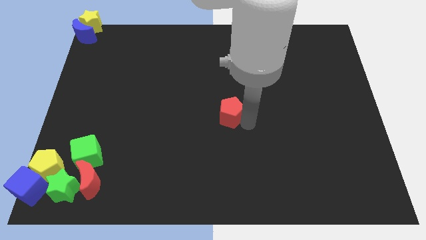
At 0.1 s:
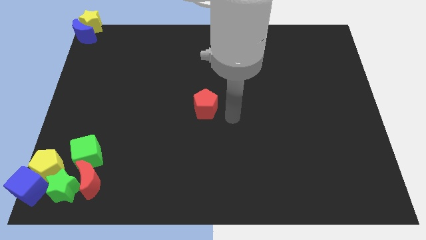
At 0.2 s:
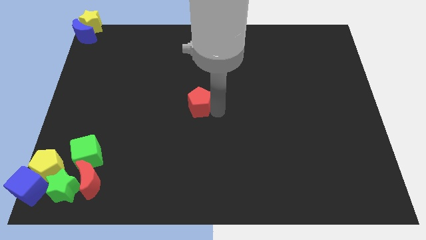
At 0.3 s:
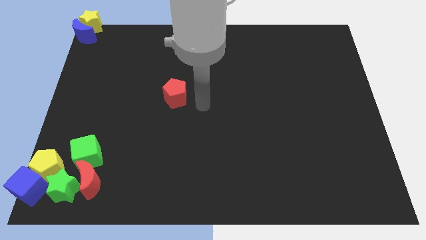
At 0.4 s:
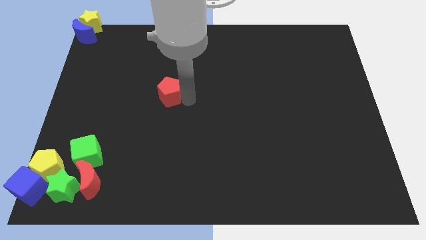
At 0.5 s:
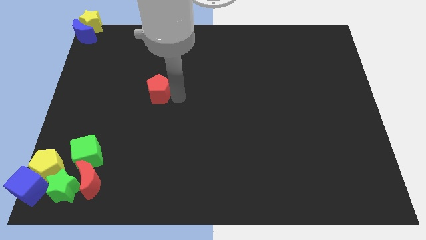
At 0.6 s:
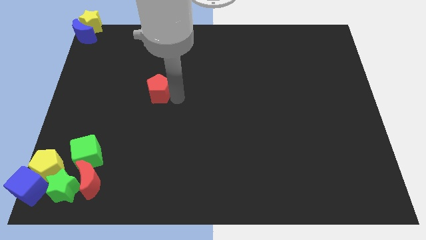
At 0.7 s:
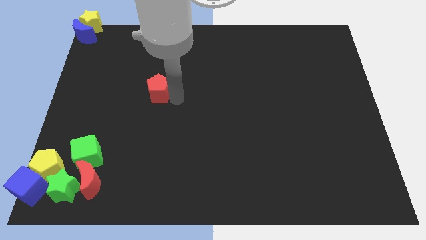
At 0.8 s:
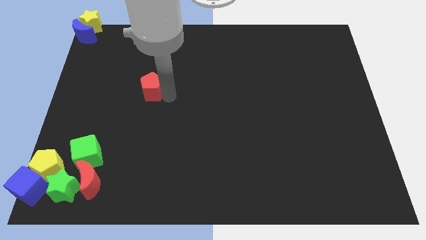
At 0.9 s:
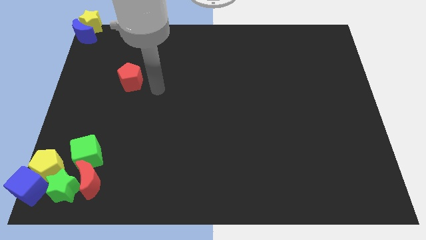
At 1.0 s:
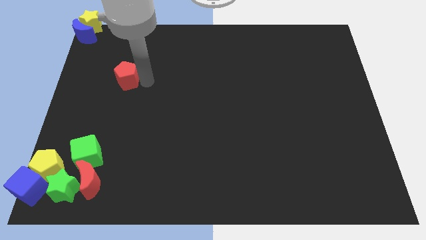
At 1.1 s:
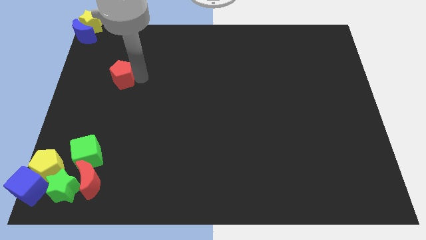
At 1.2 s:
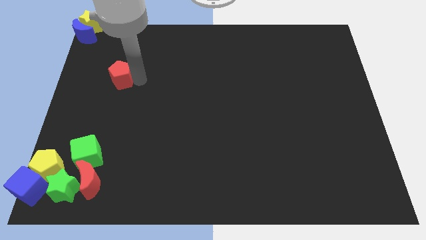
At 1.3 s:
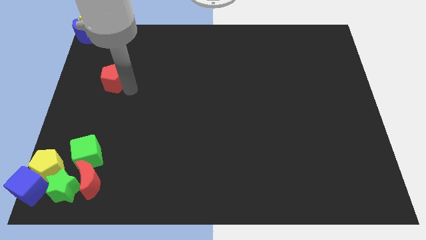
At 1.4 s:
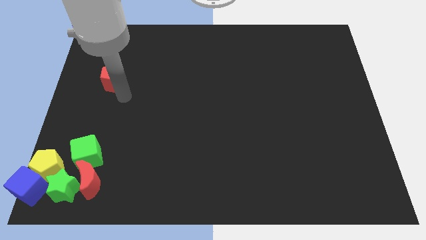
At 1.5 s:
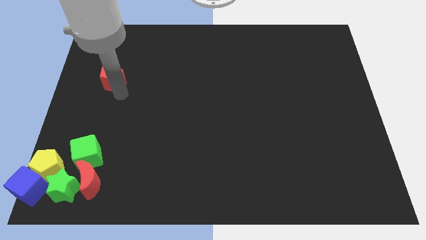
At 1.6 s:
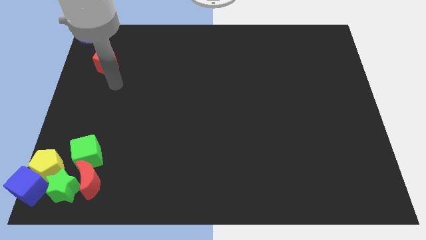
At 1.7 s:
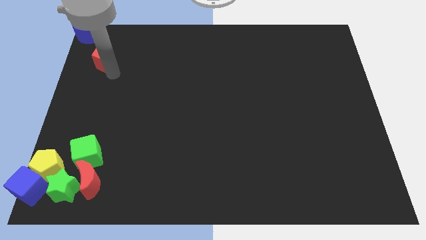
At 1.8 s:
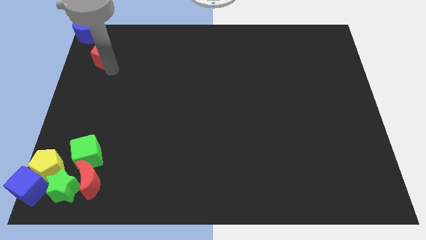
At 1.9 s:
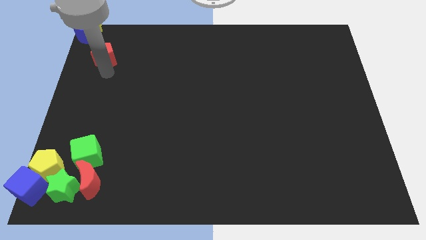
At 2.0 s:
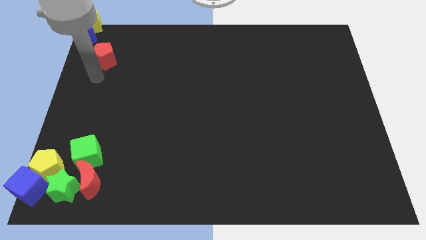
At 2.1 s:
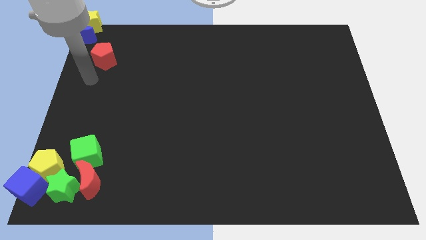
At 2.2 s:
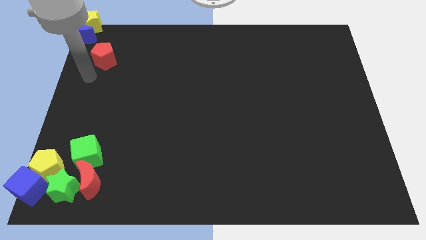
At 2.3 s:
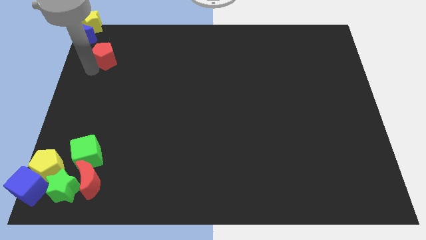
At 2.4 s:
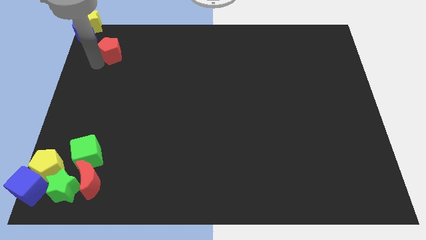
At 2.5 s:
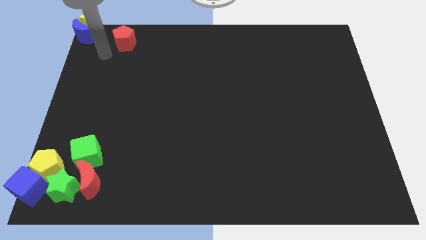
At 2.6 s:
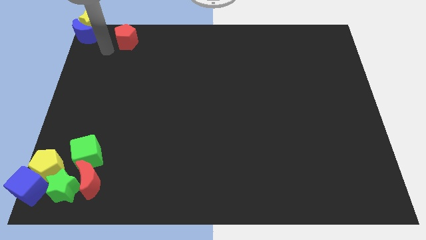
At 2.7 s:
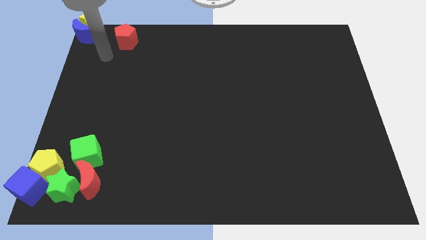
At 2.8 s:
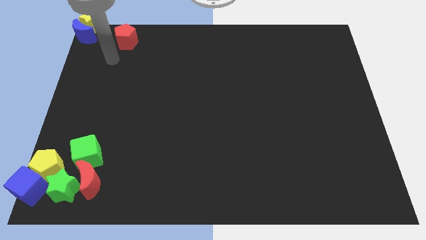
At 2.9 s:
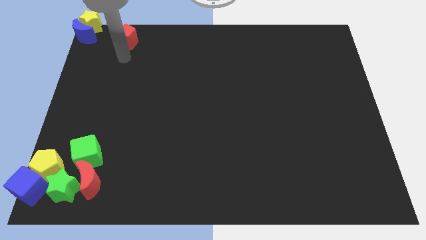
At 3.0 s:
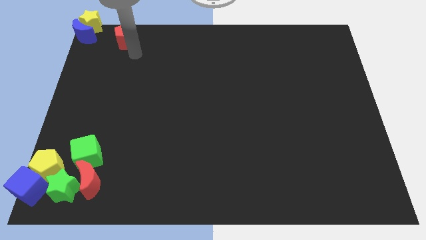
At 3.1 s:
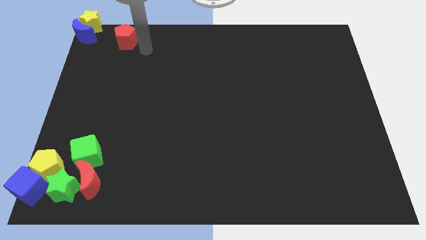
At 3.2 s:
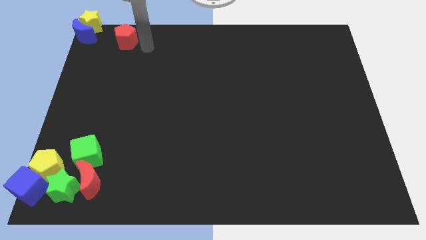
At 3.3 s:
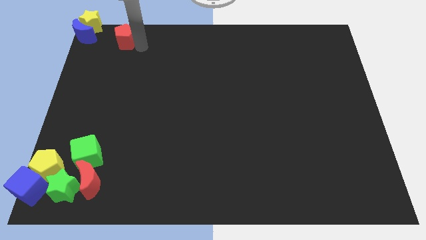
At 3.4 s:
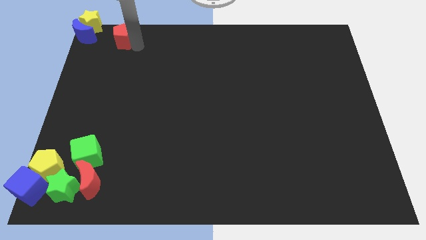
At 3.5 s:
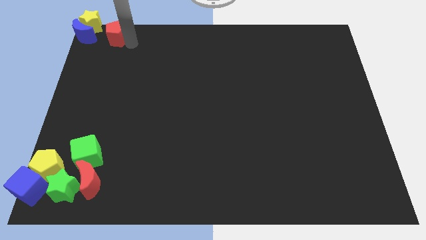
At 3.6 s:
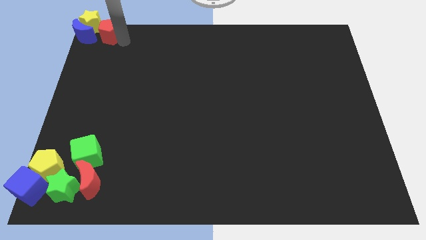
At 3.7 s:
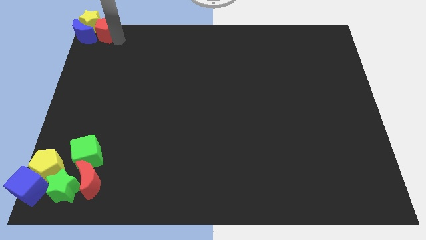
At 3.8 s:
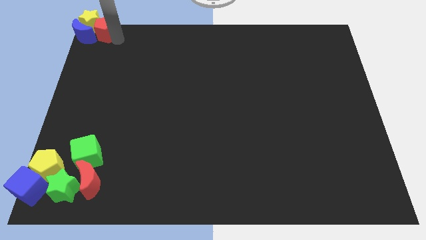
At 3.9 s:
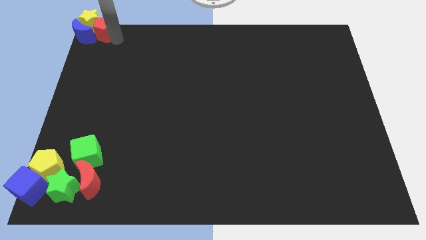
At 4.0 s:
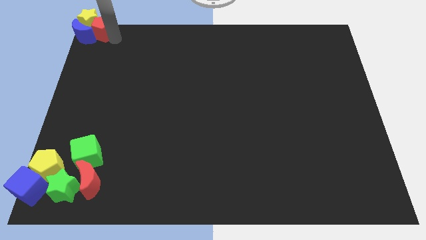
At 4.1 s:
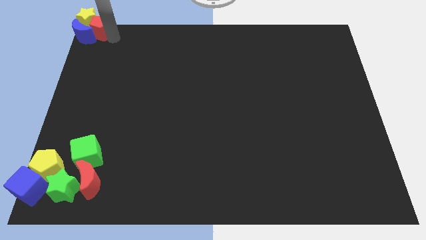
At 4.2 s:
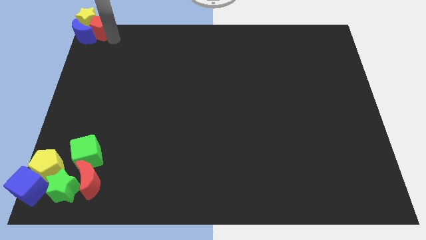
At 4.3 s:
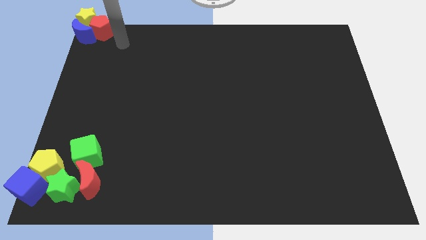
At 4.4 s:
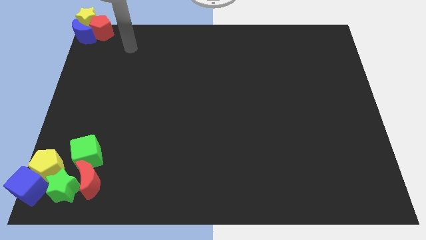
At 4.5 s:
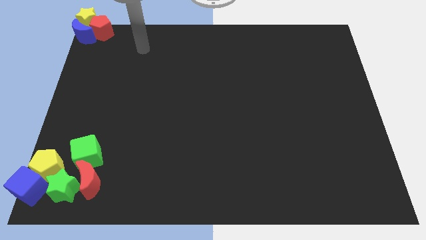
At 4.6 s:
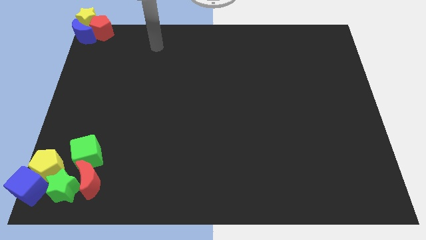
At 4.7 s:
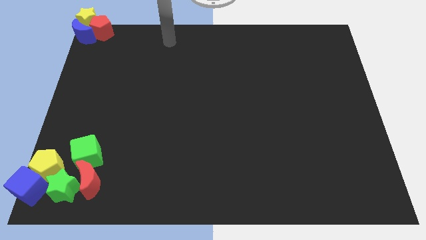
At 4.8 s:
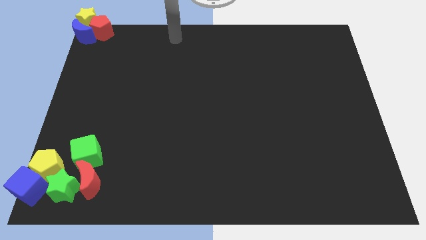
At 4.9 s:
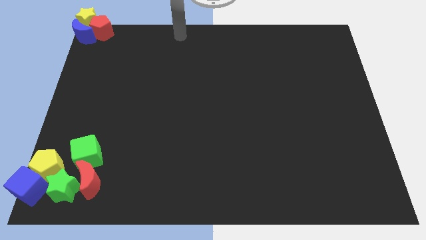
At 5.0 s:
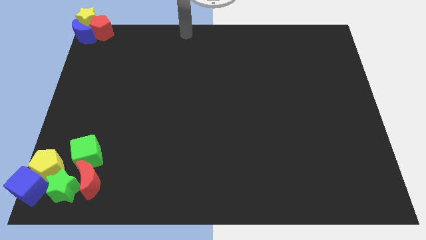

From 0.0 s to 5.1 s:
push the red pentagon towards the yellow star and blue moon

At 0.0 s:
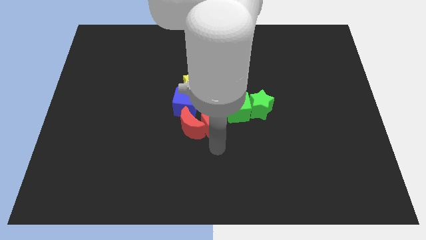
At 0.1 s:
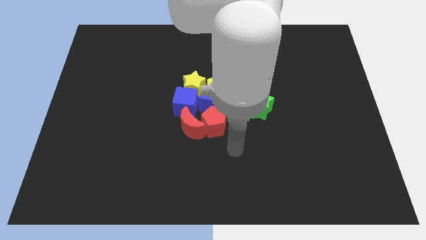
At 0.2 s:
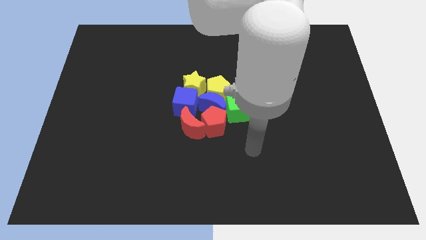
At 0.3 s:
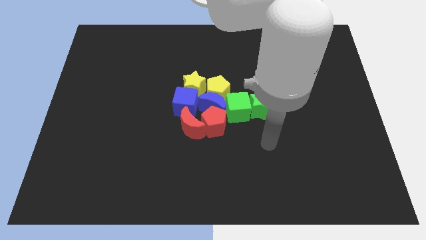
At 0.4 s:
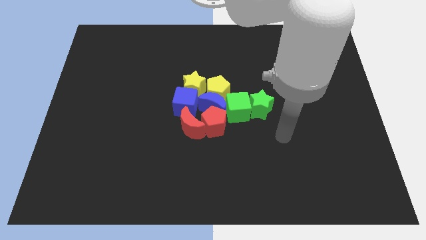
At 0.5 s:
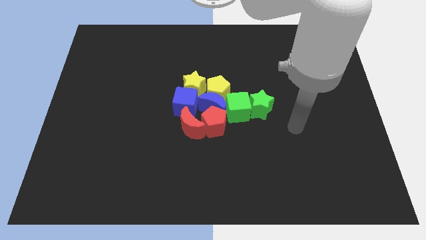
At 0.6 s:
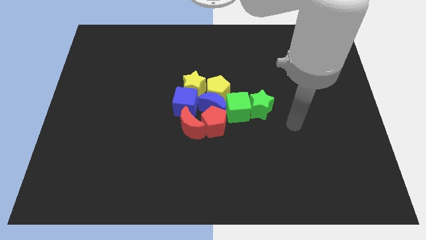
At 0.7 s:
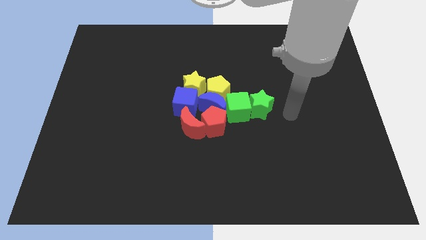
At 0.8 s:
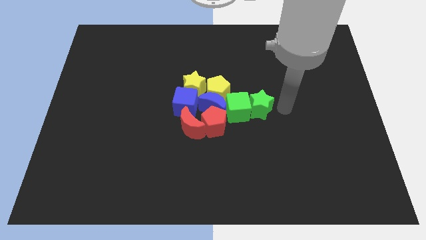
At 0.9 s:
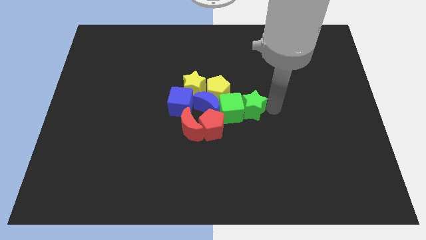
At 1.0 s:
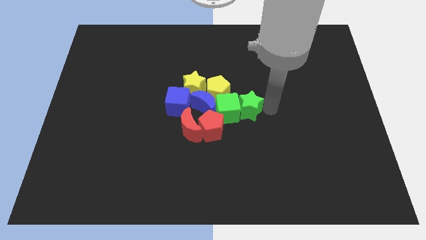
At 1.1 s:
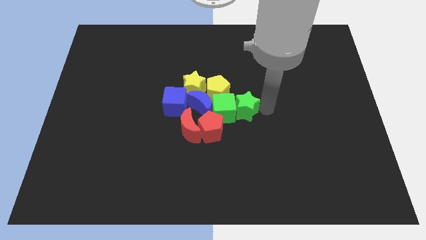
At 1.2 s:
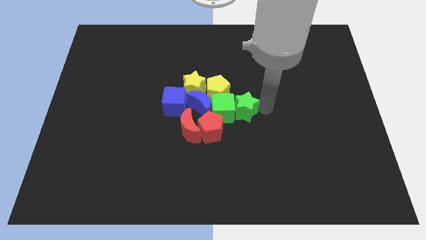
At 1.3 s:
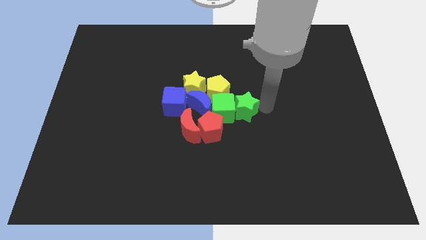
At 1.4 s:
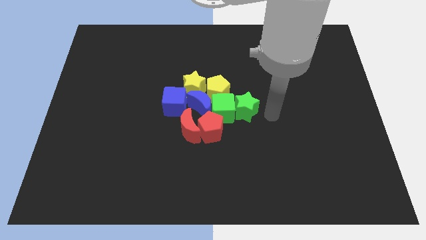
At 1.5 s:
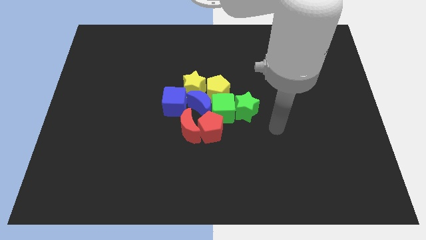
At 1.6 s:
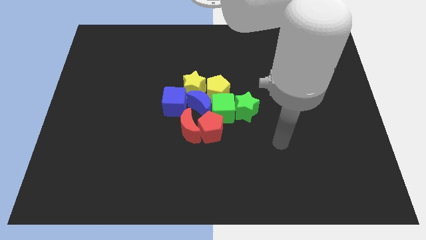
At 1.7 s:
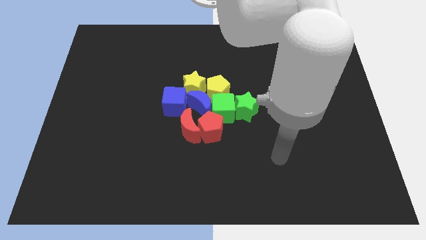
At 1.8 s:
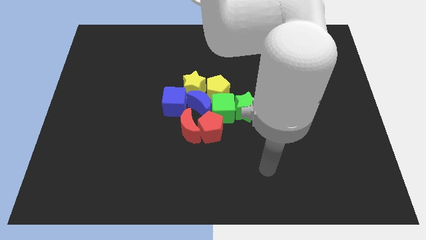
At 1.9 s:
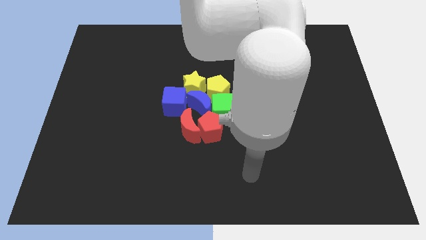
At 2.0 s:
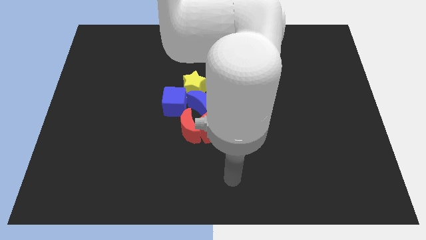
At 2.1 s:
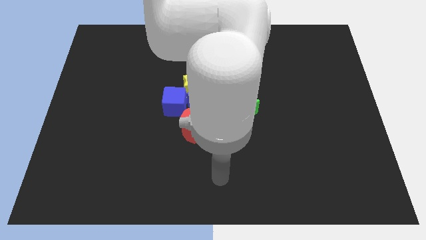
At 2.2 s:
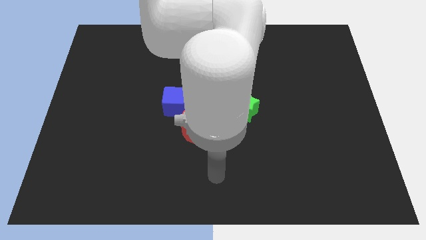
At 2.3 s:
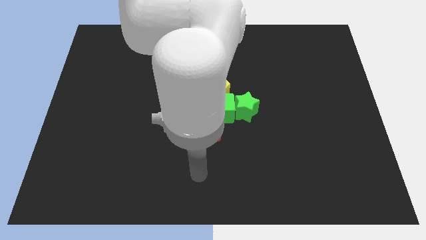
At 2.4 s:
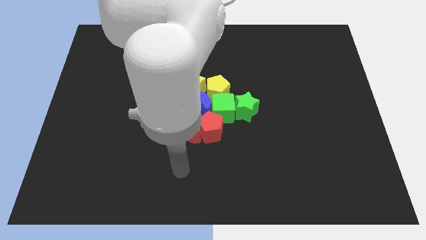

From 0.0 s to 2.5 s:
push the green star to the center of the board

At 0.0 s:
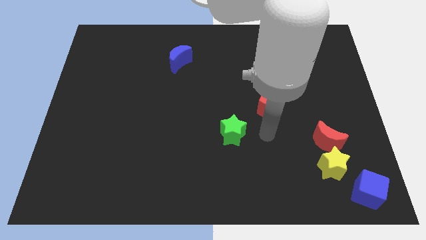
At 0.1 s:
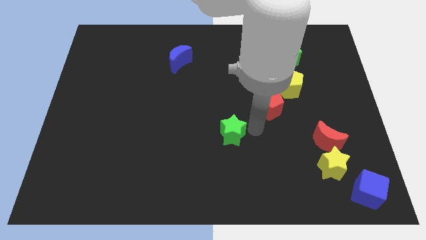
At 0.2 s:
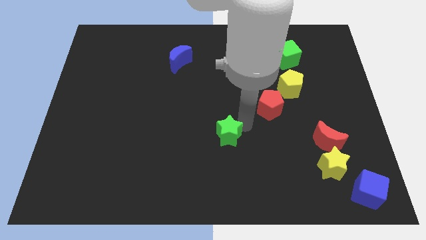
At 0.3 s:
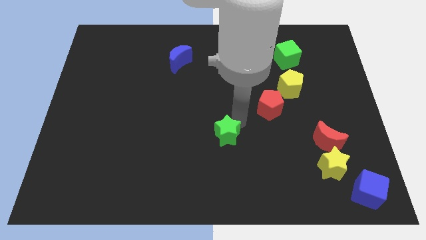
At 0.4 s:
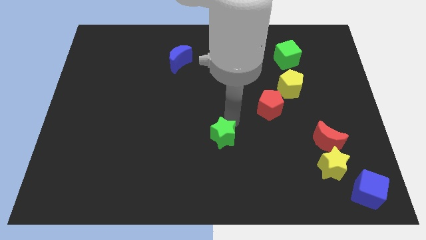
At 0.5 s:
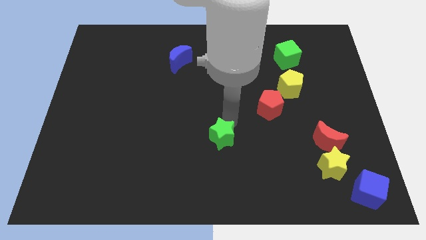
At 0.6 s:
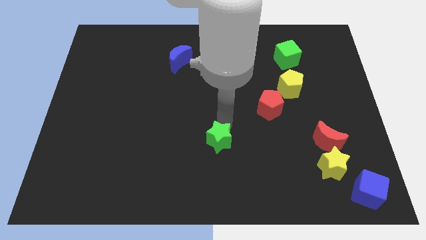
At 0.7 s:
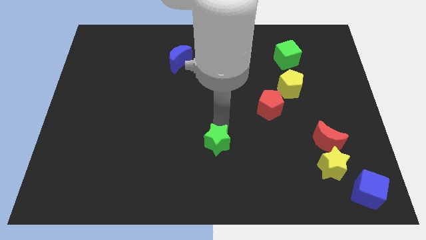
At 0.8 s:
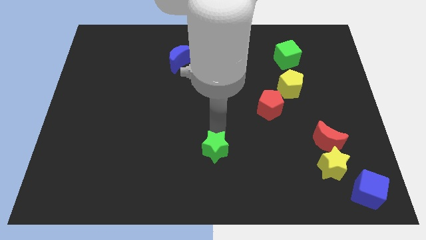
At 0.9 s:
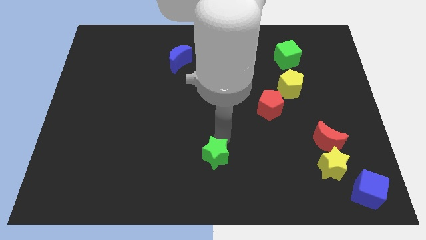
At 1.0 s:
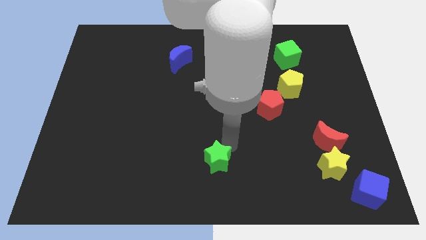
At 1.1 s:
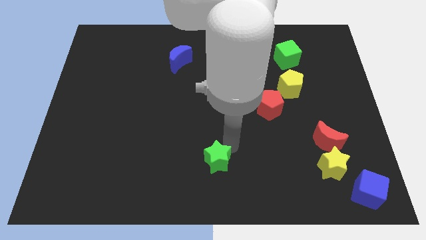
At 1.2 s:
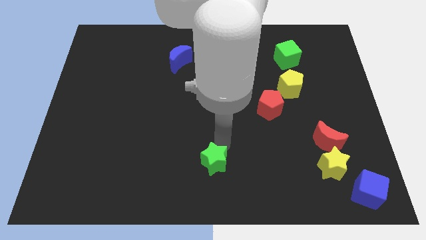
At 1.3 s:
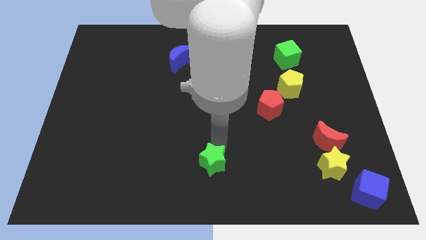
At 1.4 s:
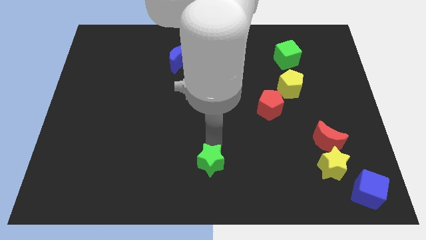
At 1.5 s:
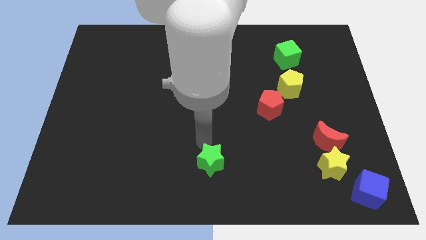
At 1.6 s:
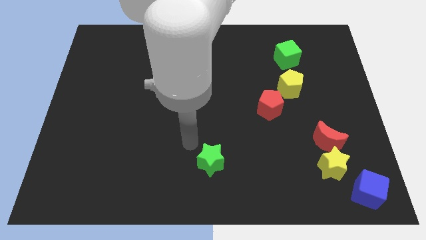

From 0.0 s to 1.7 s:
move the green star towards bottom center of the board
